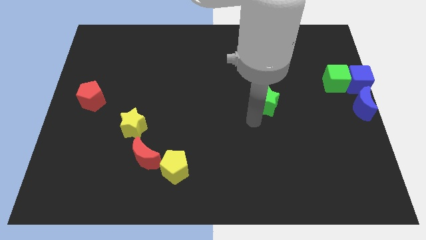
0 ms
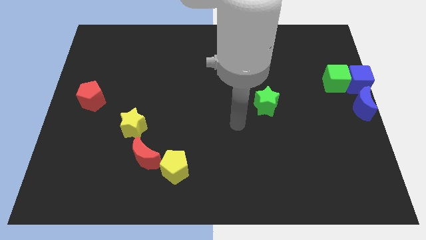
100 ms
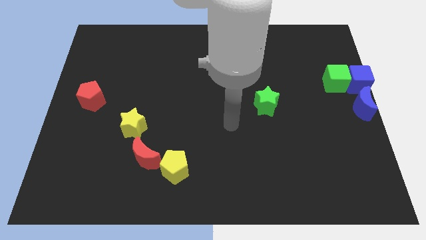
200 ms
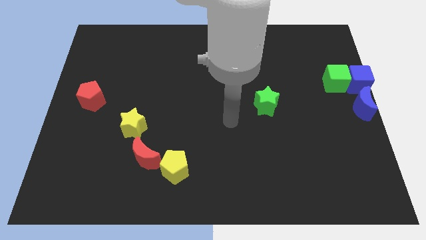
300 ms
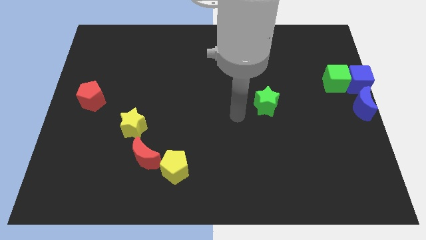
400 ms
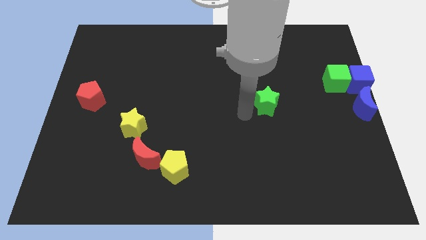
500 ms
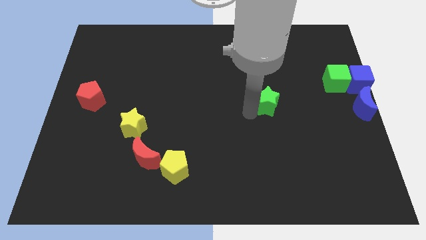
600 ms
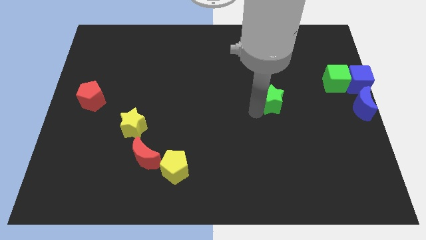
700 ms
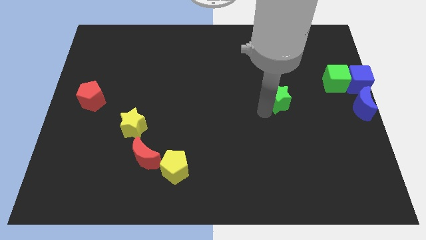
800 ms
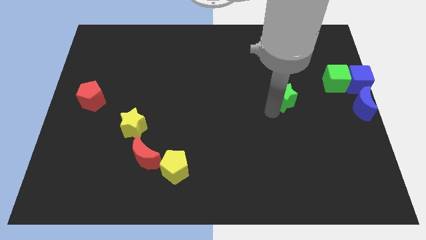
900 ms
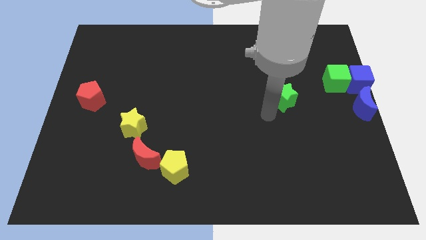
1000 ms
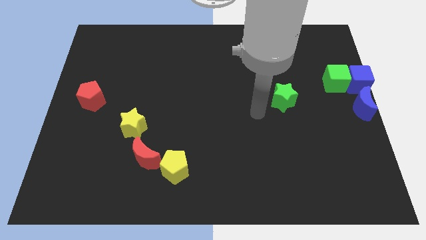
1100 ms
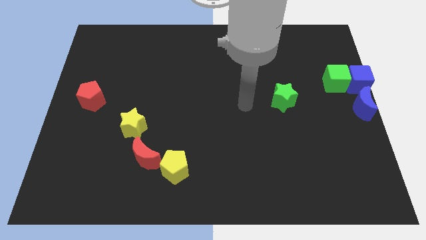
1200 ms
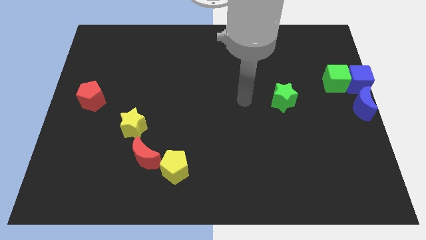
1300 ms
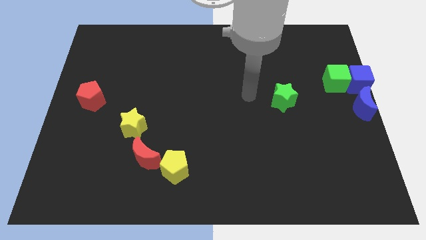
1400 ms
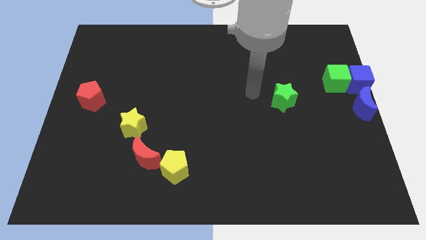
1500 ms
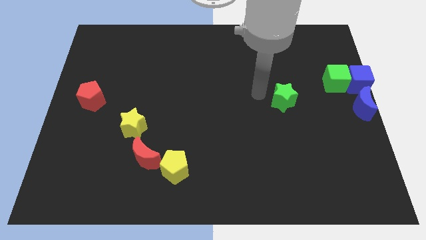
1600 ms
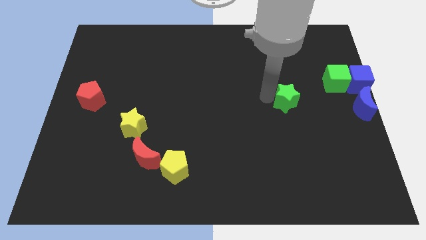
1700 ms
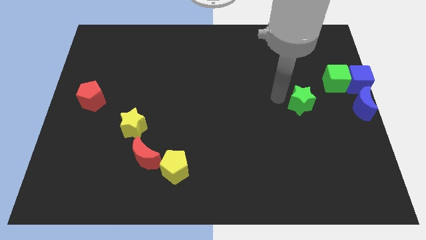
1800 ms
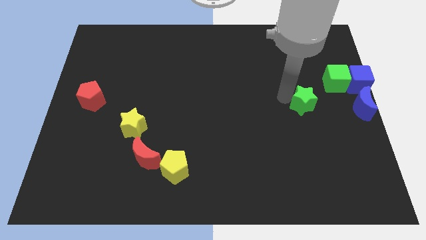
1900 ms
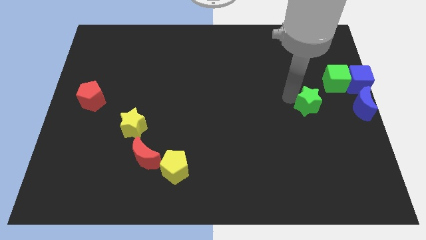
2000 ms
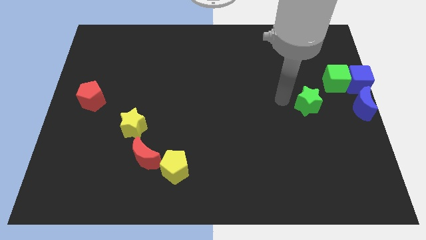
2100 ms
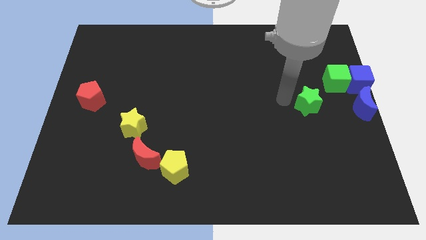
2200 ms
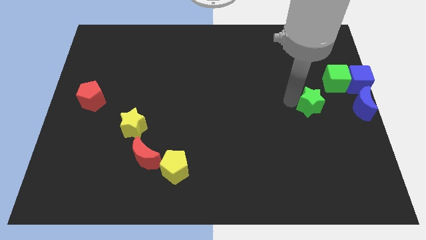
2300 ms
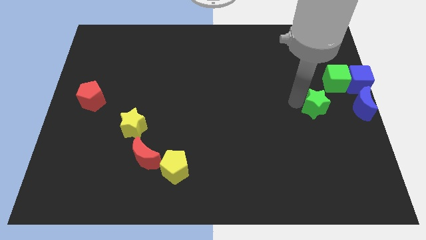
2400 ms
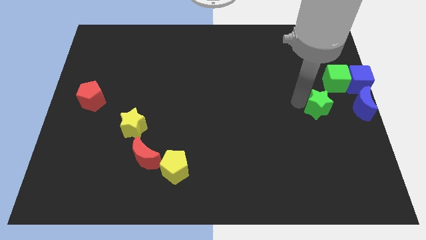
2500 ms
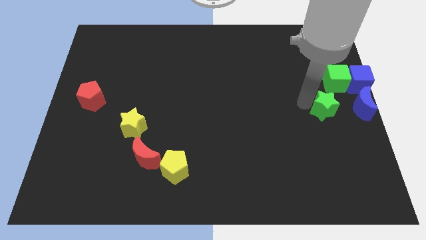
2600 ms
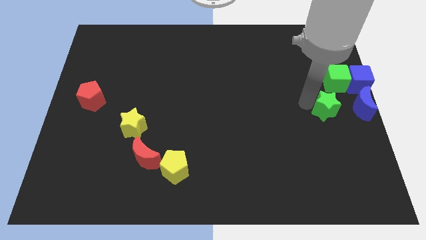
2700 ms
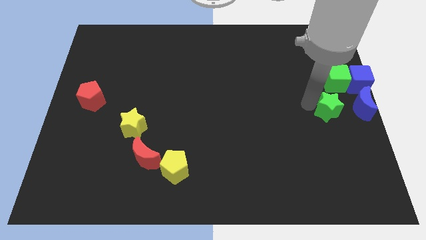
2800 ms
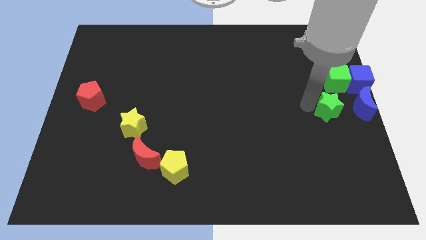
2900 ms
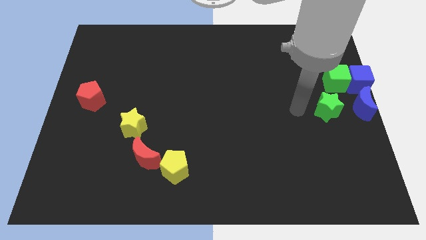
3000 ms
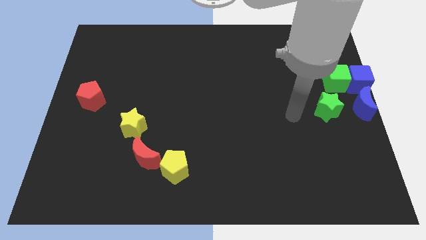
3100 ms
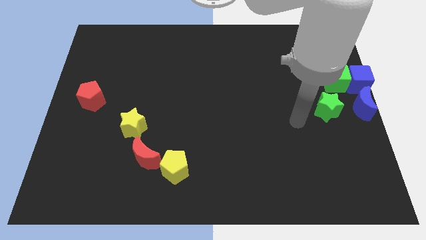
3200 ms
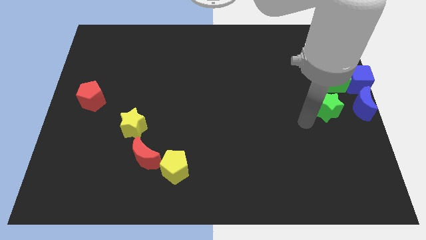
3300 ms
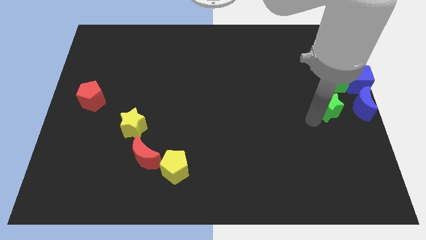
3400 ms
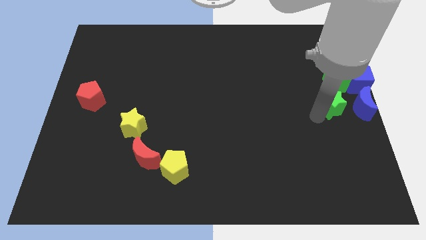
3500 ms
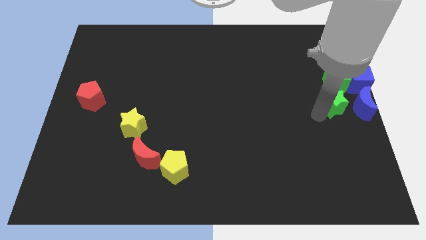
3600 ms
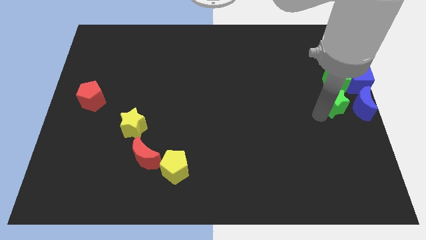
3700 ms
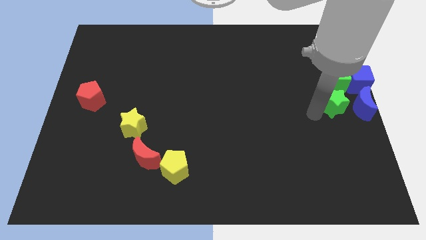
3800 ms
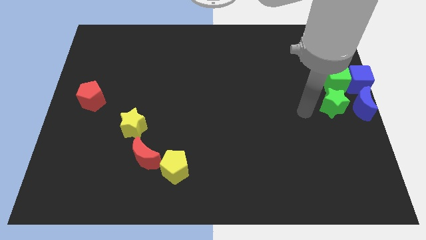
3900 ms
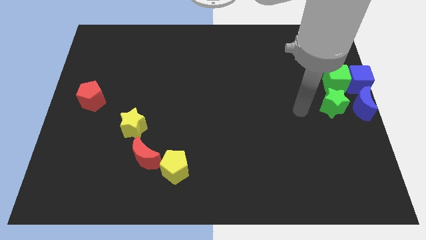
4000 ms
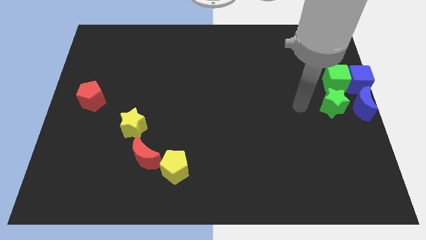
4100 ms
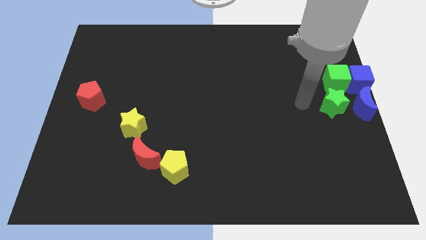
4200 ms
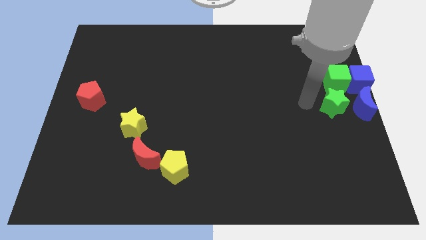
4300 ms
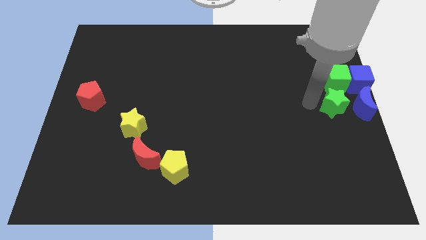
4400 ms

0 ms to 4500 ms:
move the green star vertically below the green cube

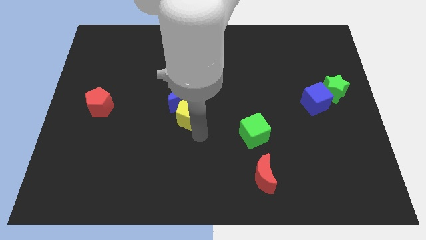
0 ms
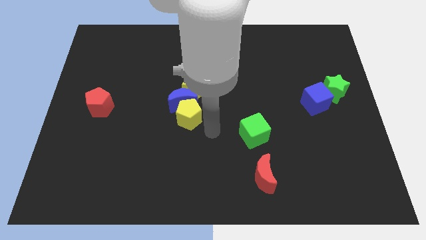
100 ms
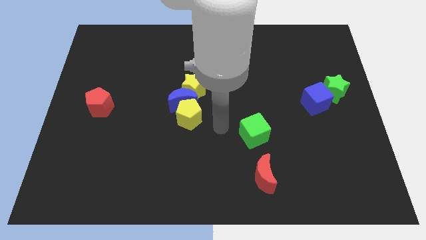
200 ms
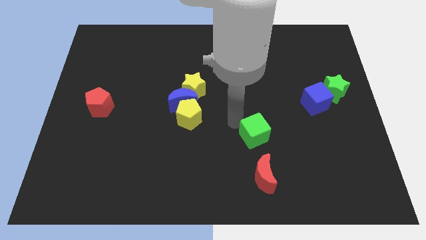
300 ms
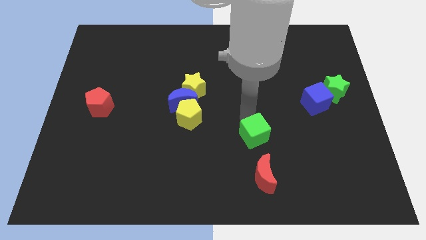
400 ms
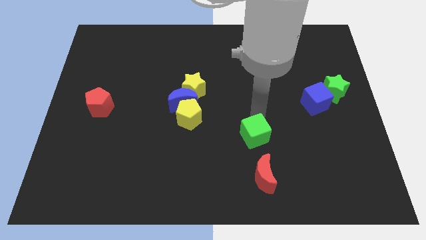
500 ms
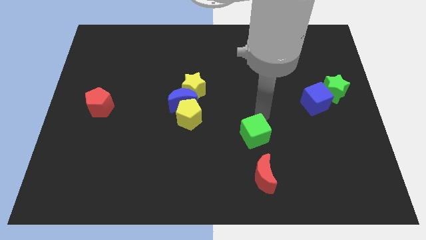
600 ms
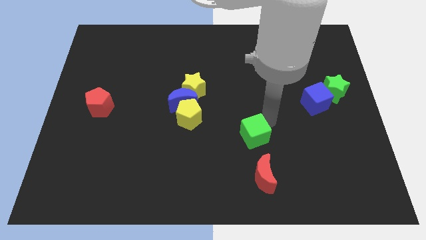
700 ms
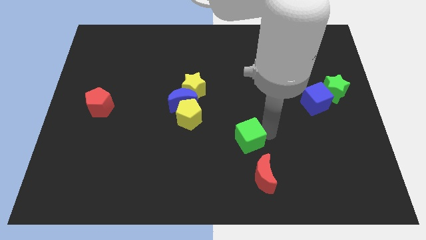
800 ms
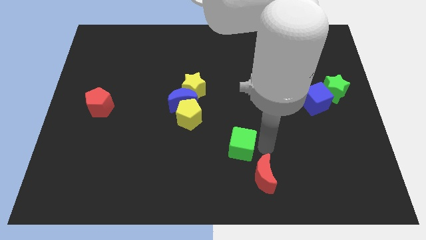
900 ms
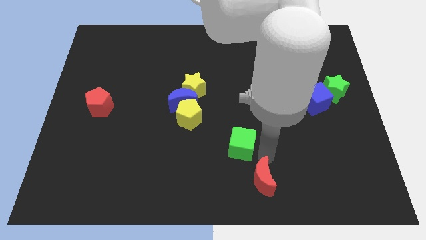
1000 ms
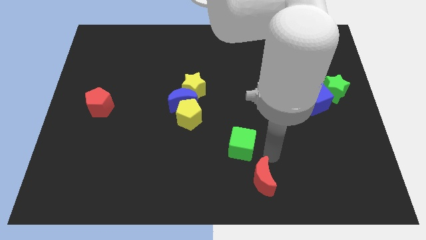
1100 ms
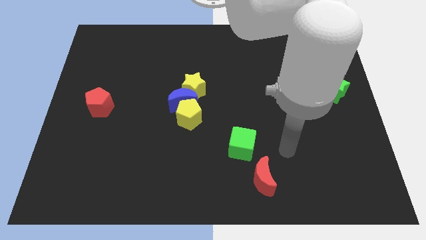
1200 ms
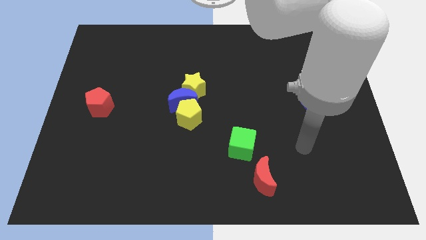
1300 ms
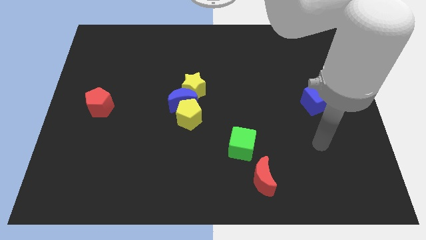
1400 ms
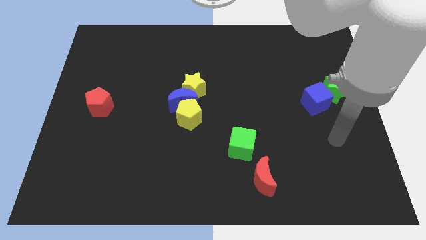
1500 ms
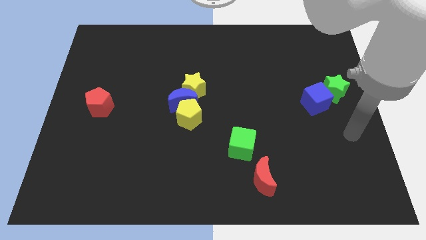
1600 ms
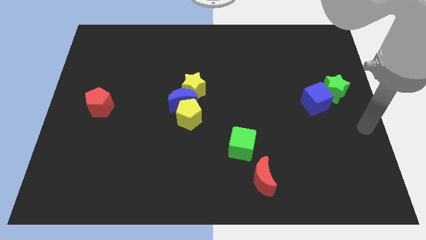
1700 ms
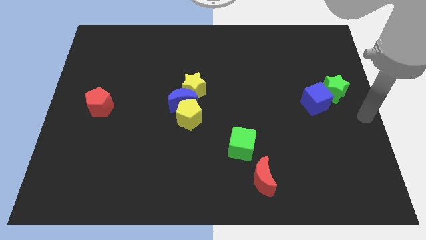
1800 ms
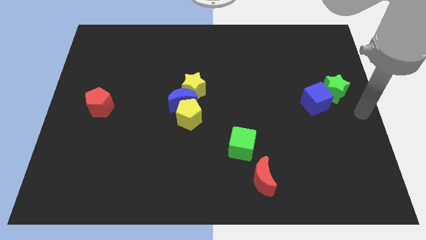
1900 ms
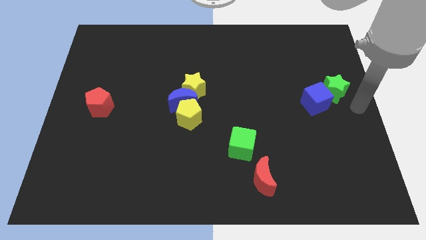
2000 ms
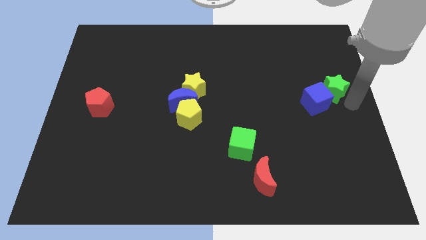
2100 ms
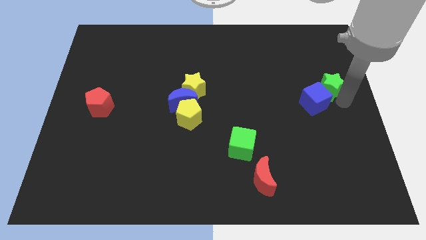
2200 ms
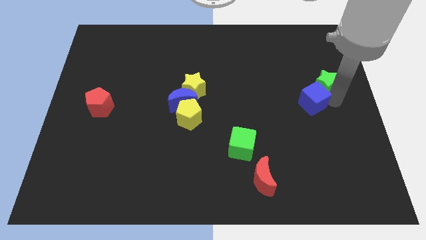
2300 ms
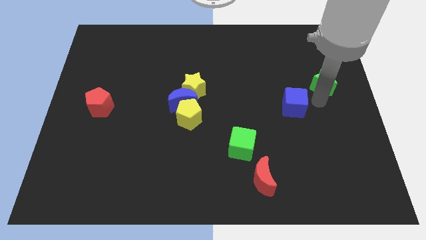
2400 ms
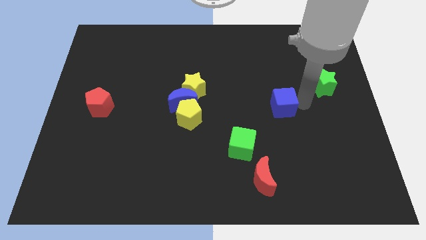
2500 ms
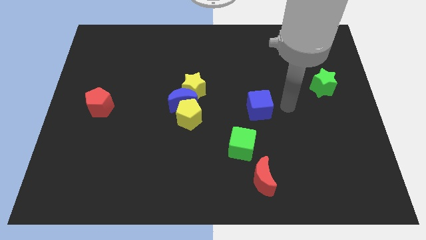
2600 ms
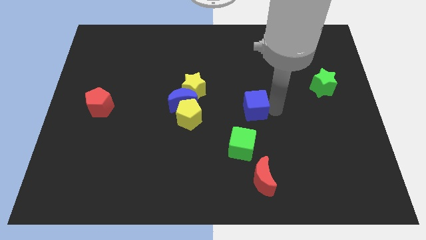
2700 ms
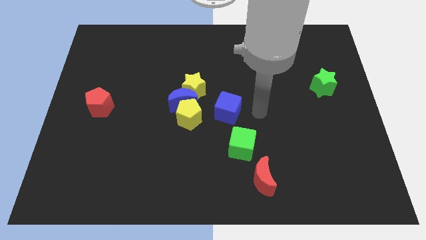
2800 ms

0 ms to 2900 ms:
move the green and the blue cubes to the top left of the red crescent to form a diagonal line

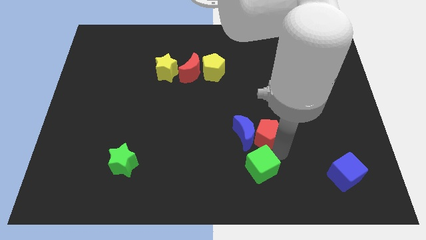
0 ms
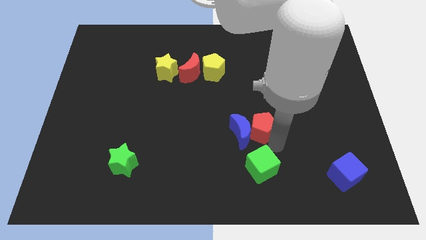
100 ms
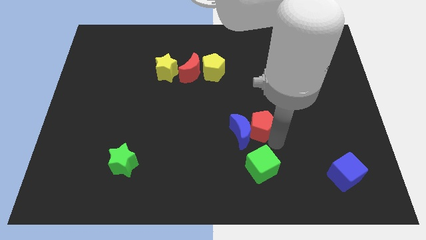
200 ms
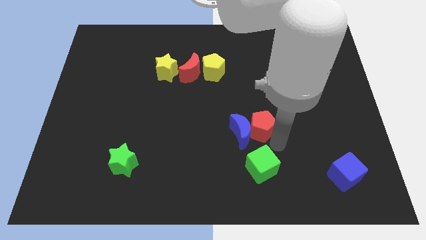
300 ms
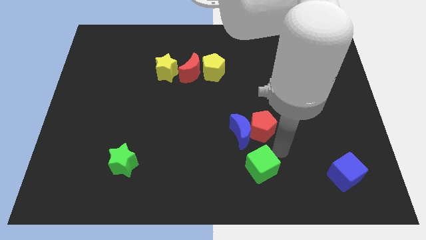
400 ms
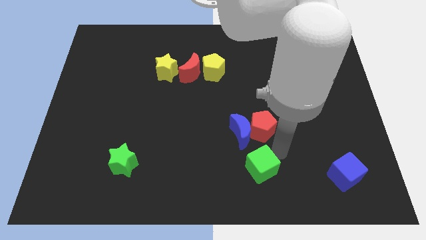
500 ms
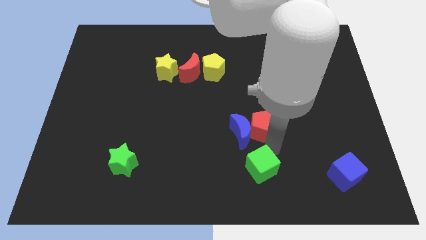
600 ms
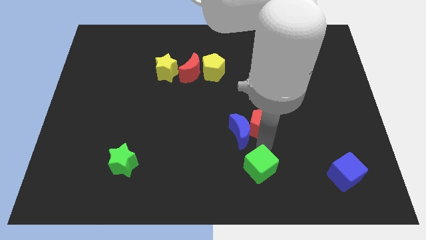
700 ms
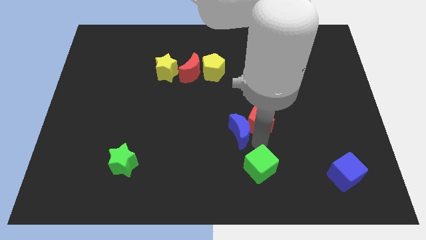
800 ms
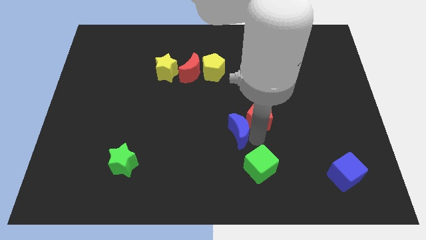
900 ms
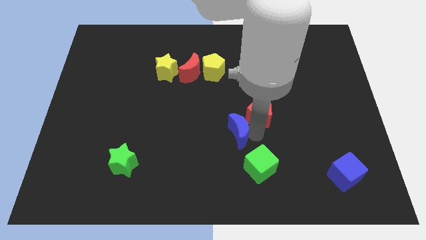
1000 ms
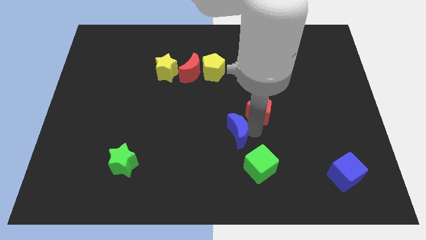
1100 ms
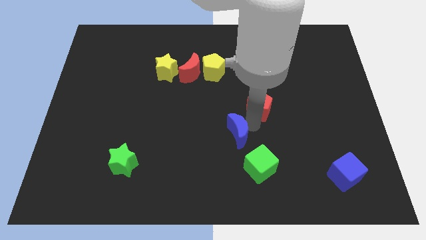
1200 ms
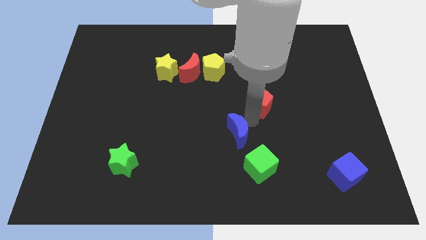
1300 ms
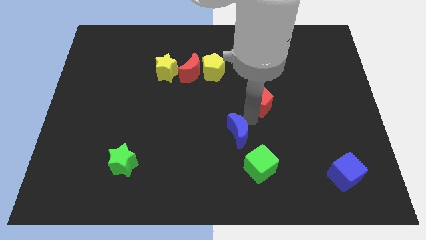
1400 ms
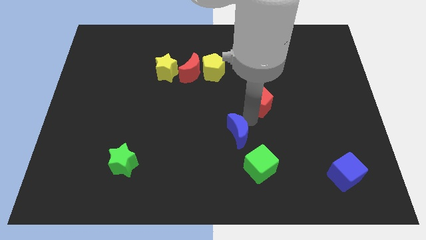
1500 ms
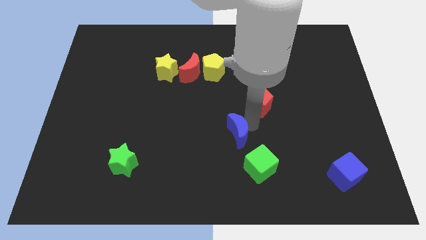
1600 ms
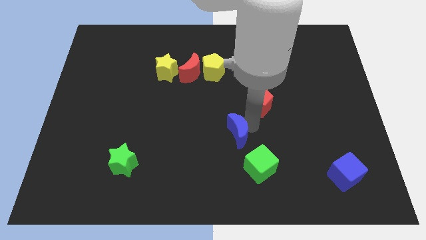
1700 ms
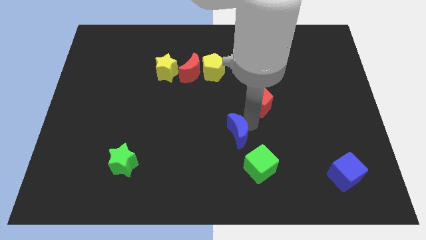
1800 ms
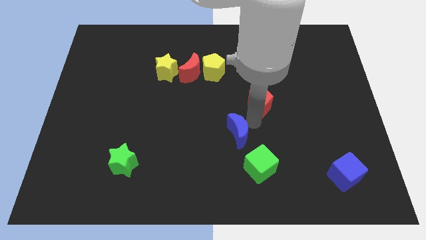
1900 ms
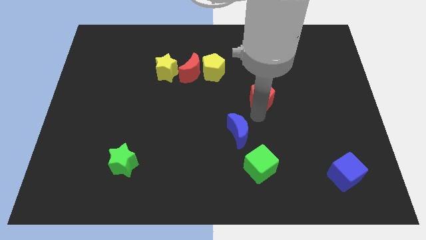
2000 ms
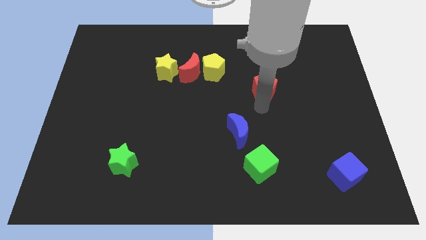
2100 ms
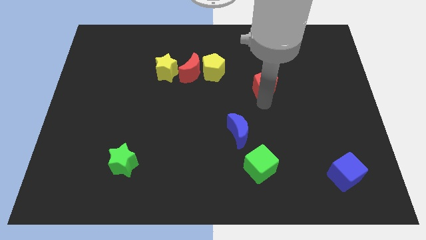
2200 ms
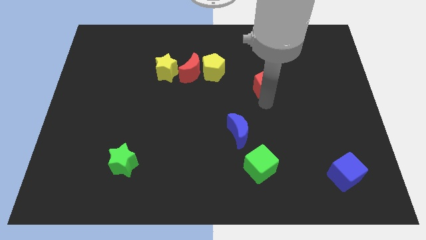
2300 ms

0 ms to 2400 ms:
separate the red pentagon from the blue moon
